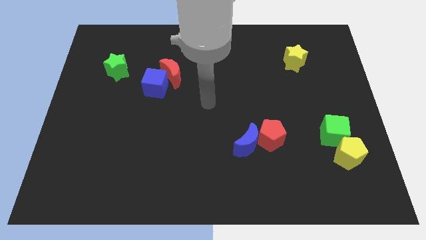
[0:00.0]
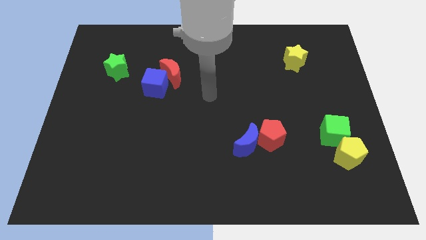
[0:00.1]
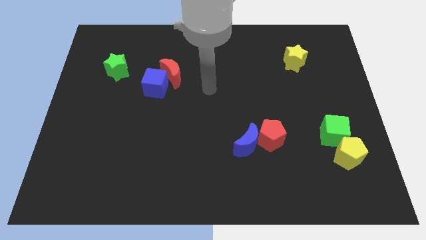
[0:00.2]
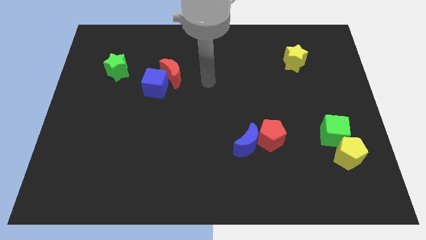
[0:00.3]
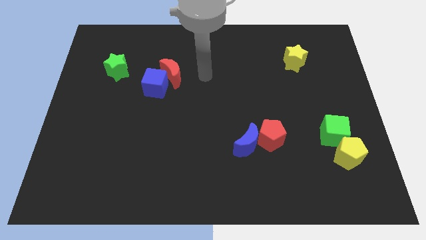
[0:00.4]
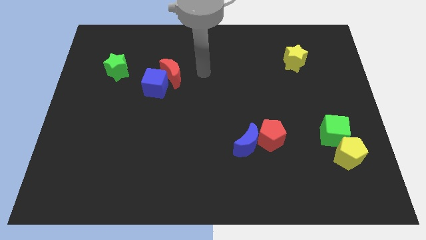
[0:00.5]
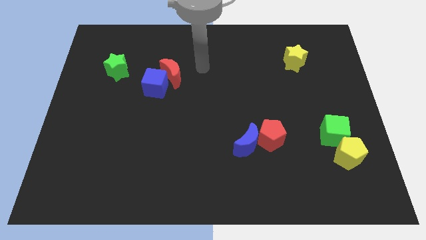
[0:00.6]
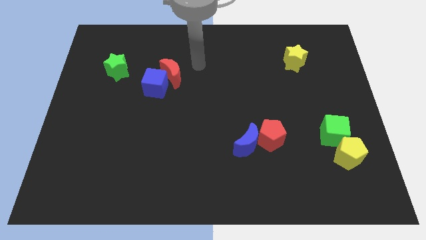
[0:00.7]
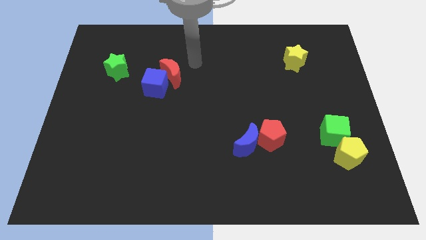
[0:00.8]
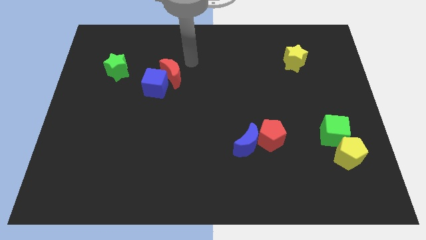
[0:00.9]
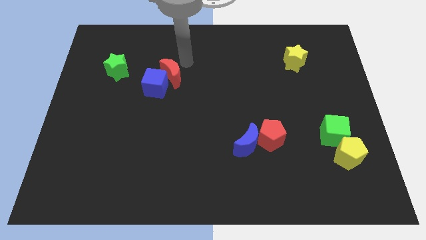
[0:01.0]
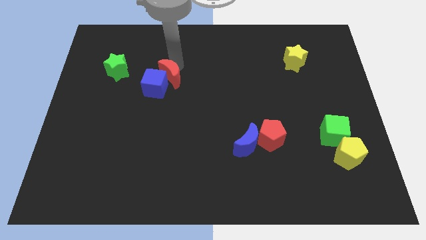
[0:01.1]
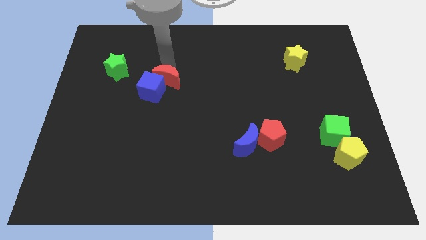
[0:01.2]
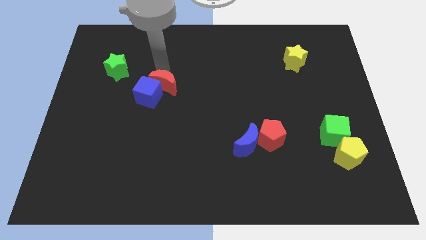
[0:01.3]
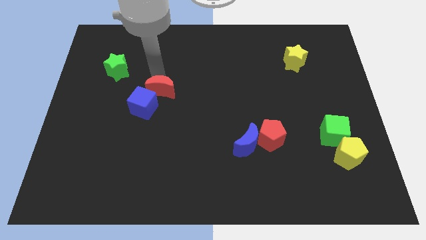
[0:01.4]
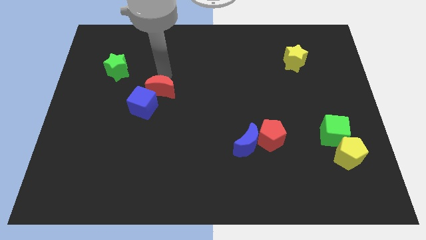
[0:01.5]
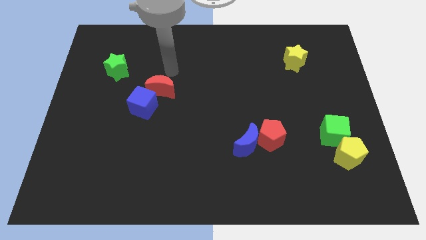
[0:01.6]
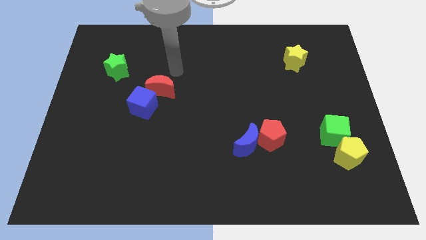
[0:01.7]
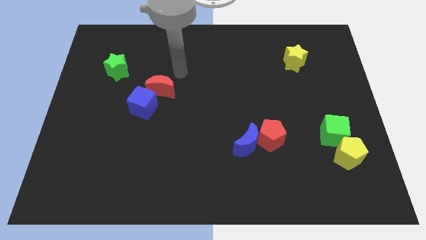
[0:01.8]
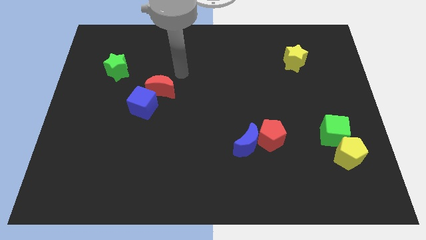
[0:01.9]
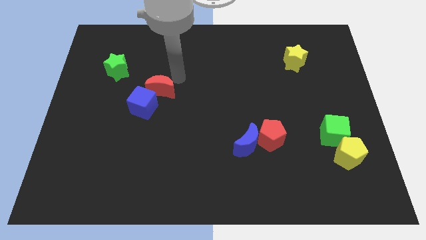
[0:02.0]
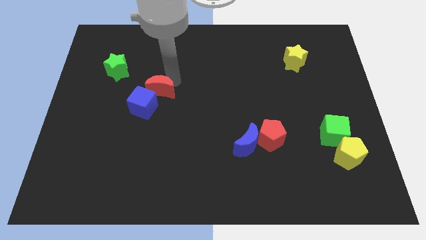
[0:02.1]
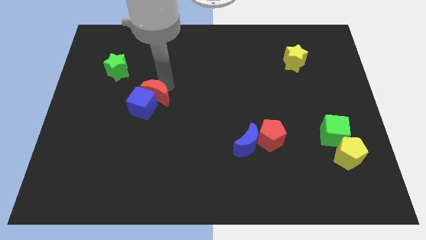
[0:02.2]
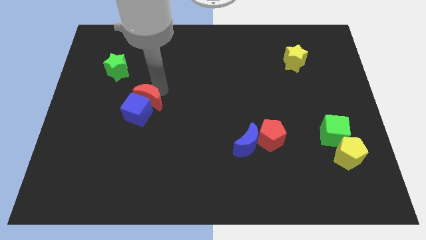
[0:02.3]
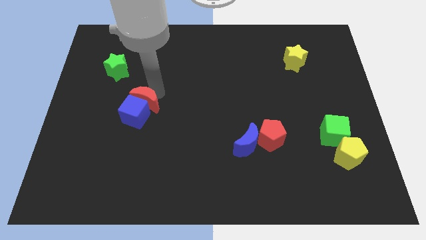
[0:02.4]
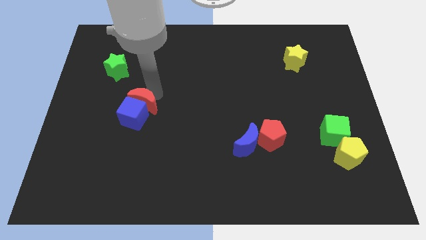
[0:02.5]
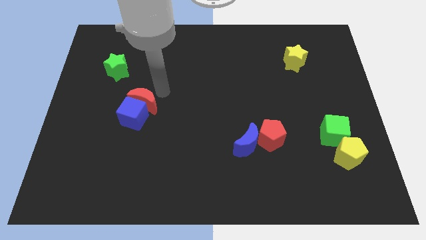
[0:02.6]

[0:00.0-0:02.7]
push red moon along with blue moon down

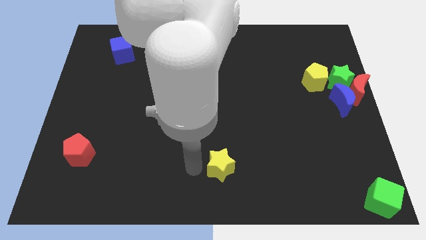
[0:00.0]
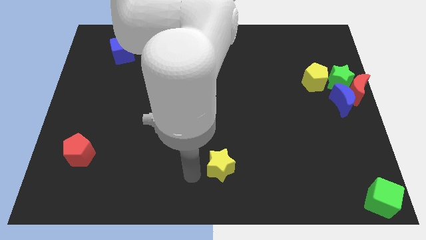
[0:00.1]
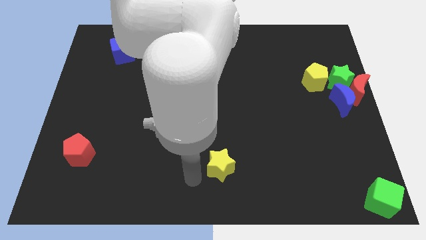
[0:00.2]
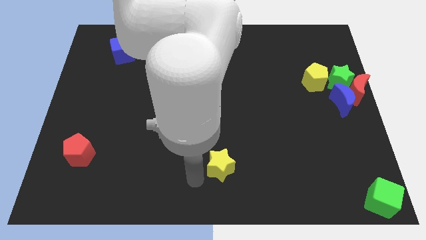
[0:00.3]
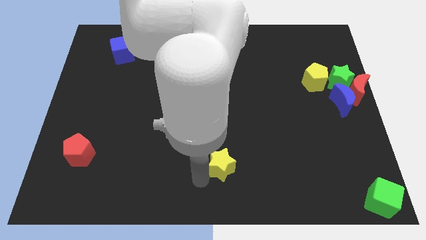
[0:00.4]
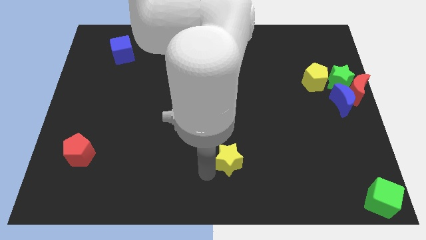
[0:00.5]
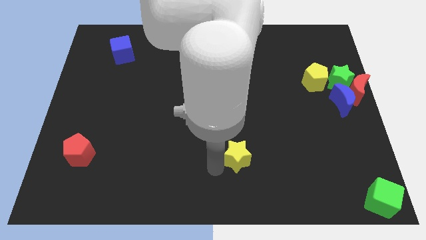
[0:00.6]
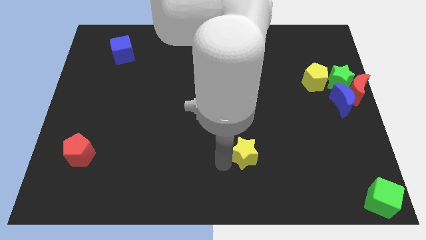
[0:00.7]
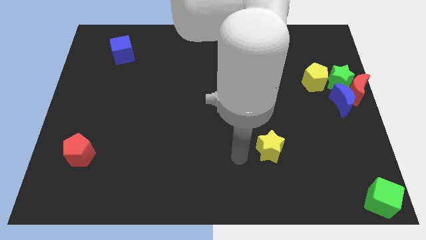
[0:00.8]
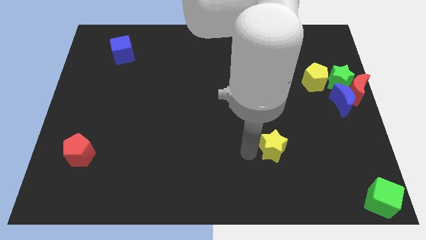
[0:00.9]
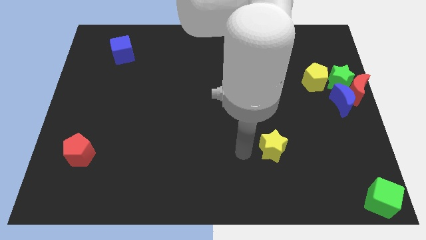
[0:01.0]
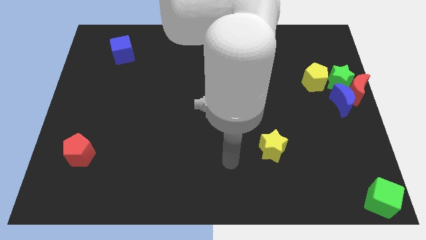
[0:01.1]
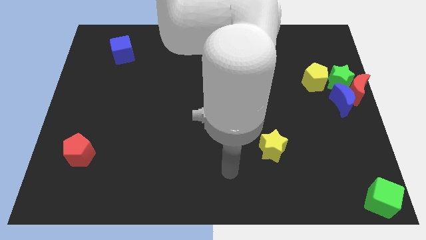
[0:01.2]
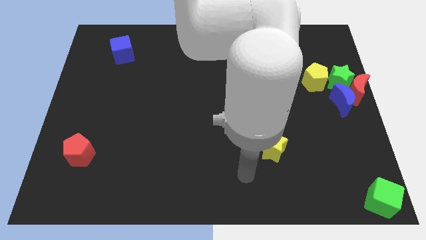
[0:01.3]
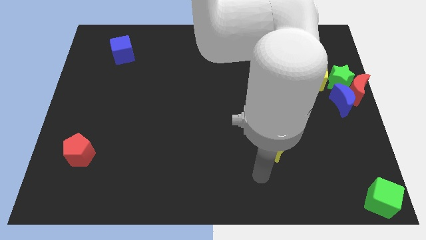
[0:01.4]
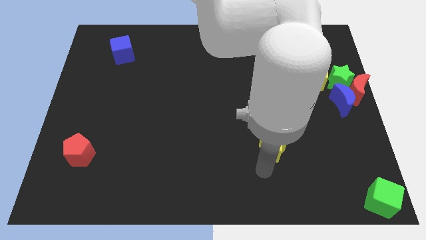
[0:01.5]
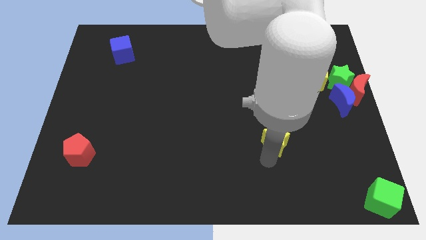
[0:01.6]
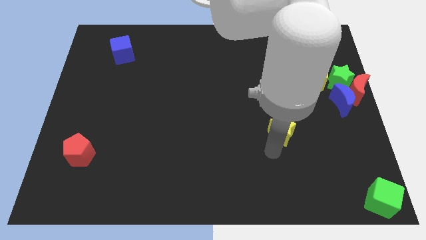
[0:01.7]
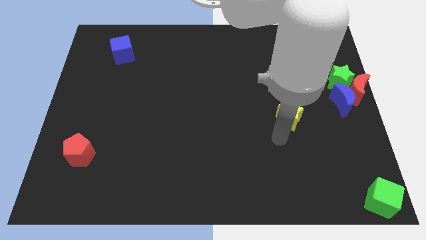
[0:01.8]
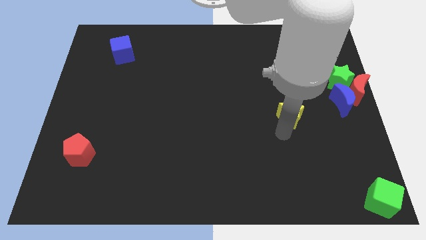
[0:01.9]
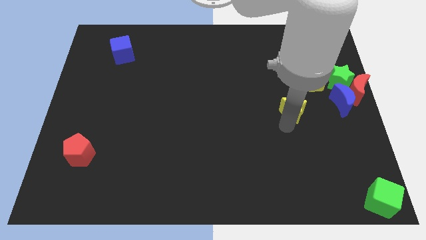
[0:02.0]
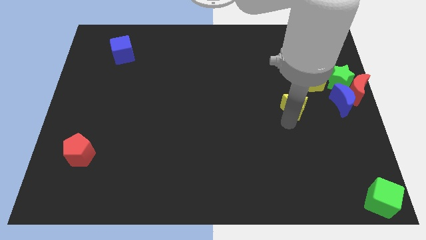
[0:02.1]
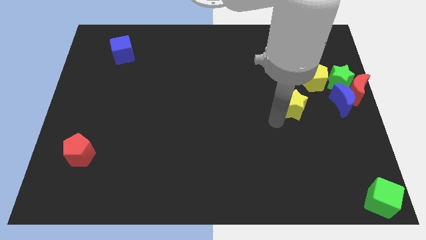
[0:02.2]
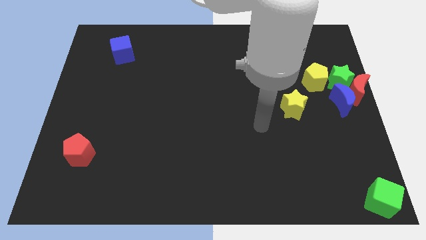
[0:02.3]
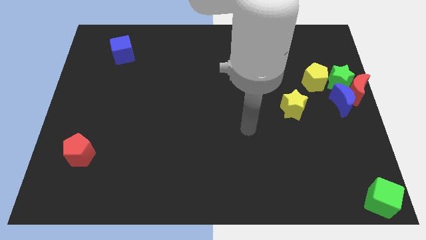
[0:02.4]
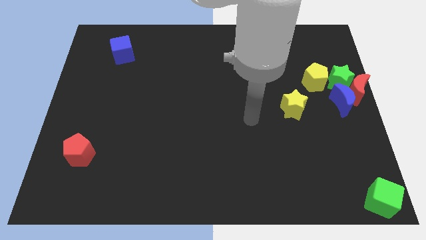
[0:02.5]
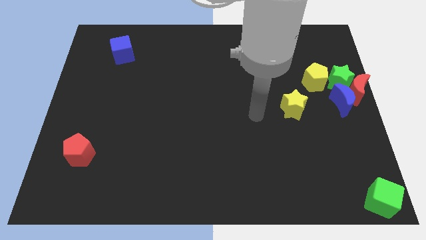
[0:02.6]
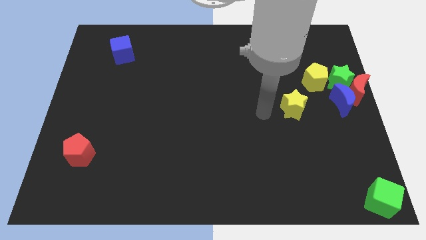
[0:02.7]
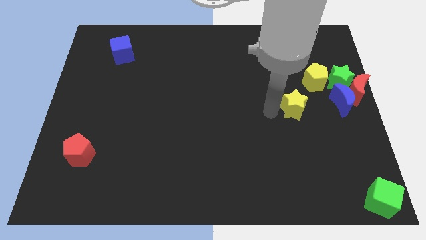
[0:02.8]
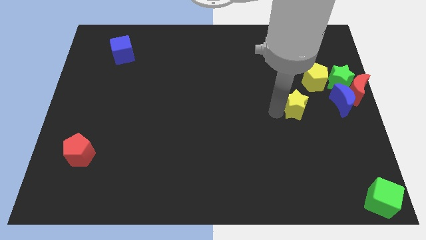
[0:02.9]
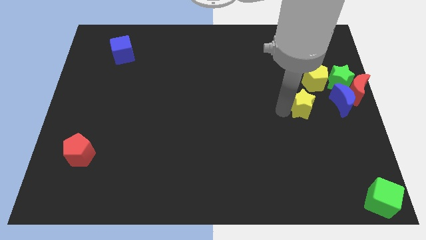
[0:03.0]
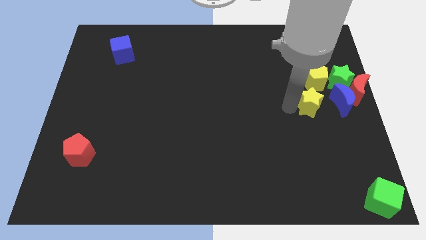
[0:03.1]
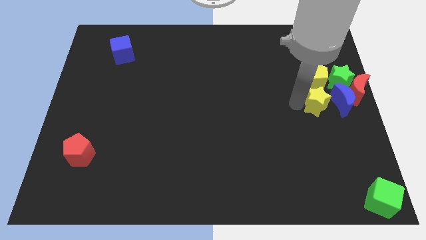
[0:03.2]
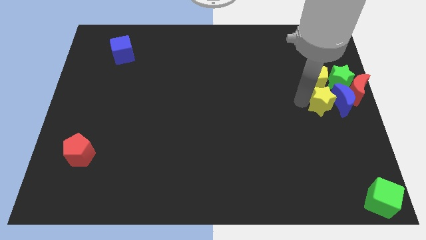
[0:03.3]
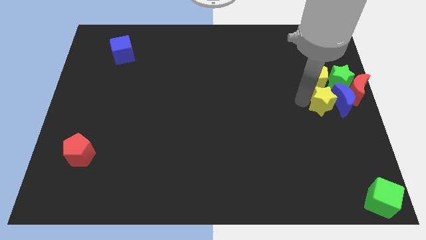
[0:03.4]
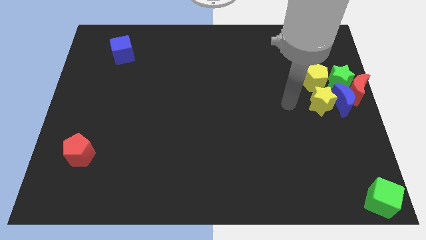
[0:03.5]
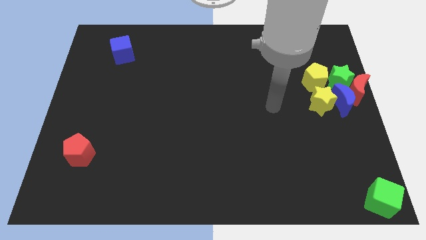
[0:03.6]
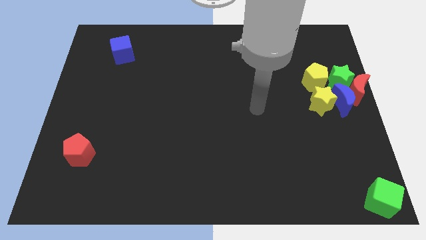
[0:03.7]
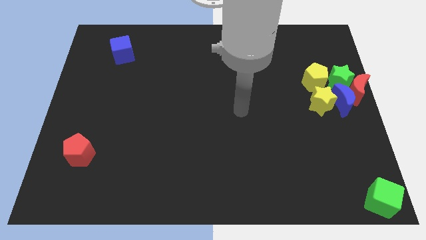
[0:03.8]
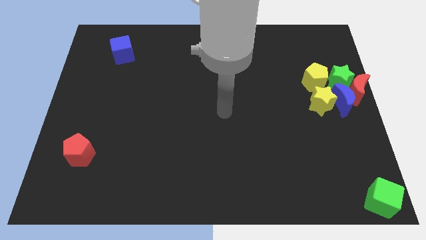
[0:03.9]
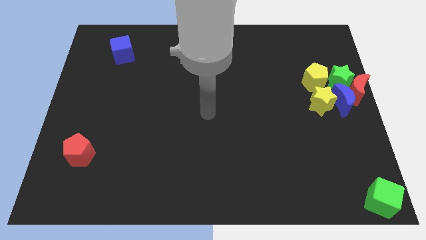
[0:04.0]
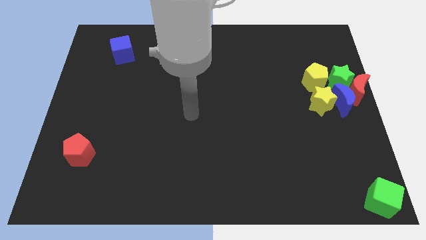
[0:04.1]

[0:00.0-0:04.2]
push yellow star into the blue crescent

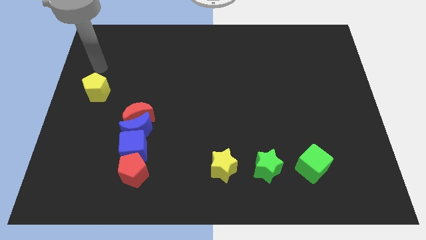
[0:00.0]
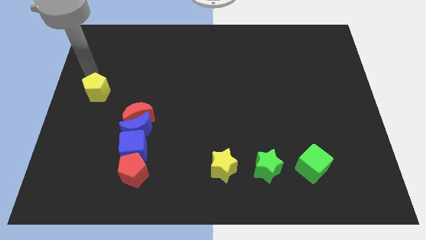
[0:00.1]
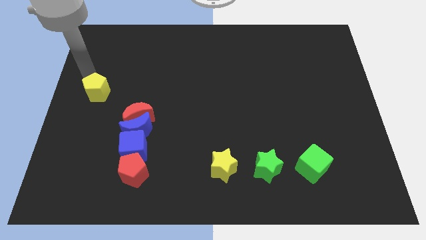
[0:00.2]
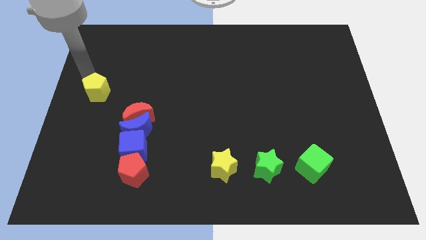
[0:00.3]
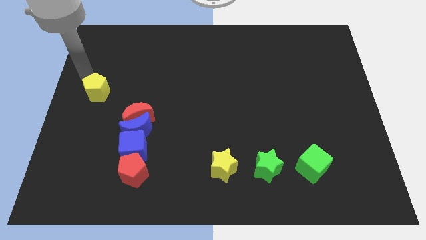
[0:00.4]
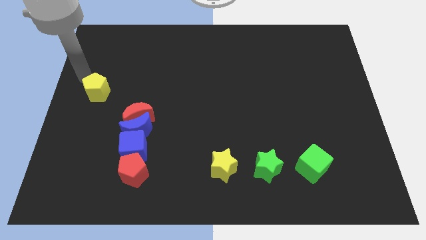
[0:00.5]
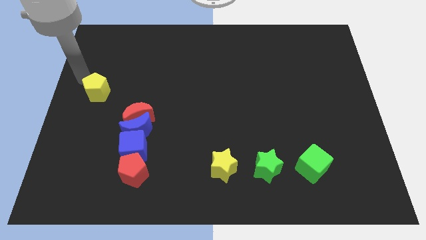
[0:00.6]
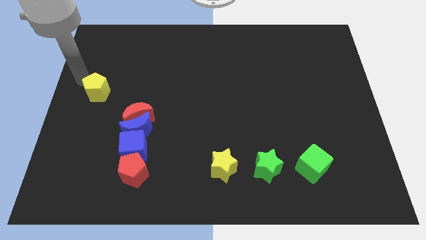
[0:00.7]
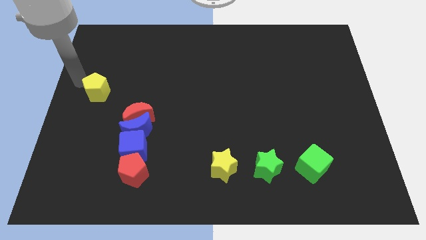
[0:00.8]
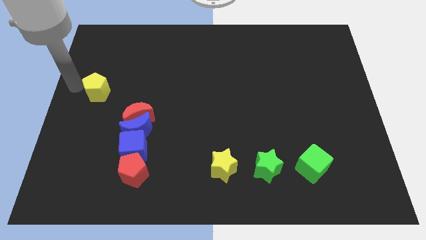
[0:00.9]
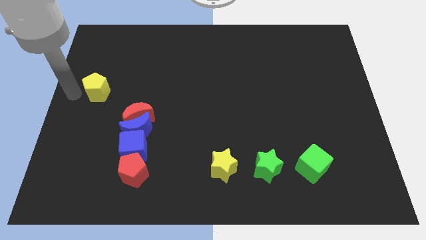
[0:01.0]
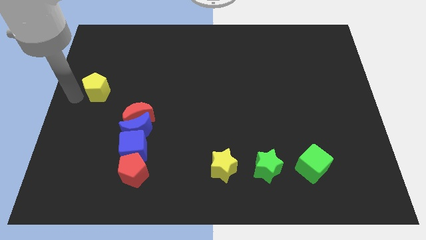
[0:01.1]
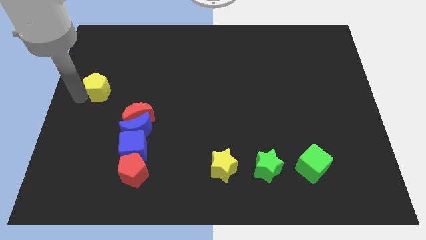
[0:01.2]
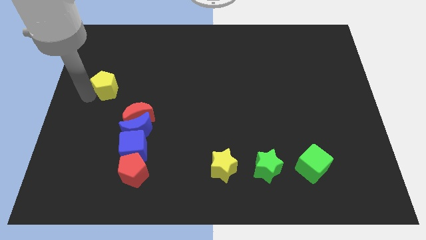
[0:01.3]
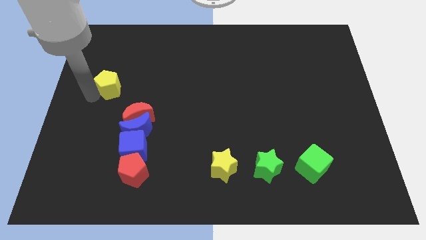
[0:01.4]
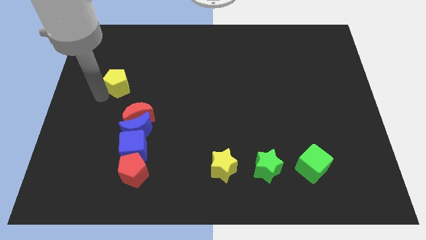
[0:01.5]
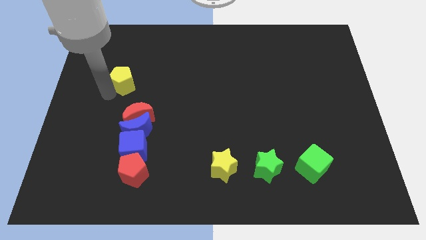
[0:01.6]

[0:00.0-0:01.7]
push yellow pentagon slightly to the right

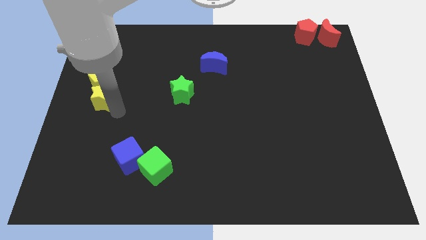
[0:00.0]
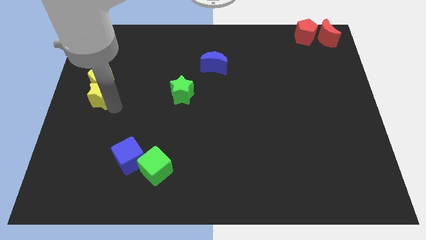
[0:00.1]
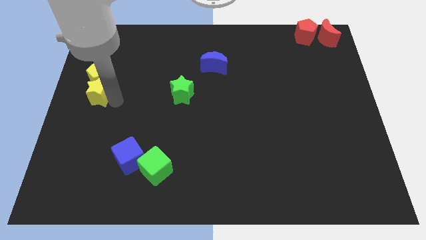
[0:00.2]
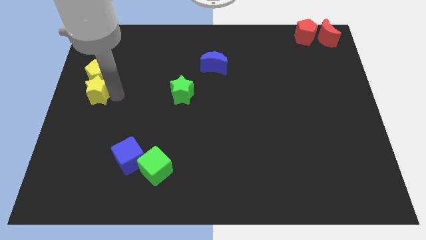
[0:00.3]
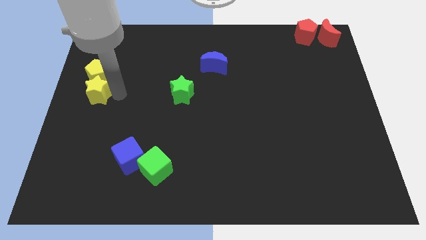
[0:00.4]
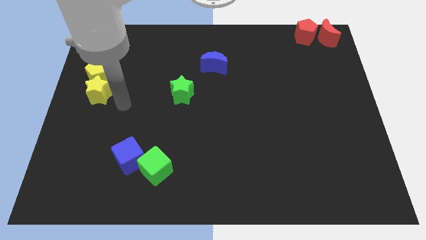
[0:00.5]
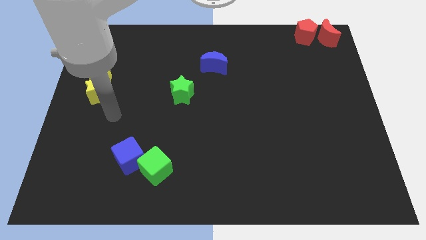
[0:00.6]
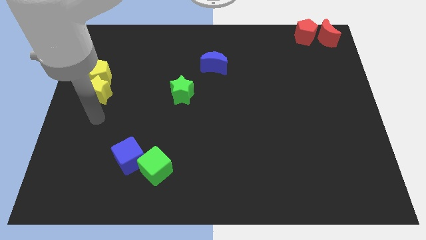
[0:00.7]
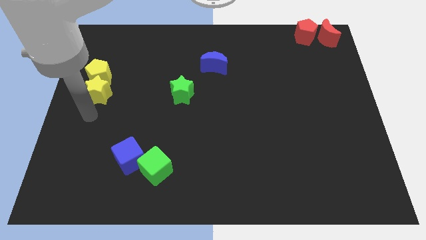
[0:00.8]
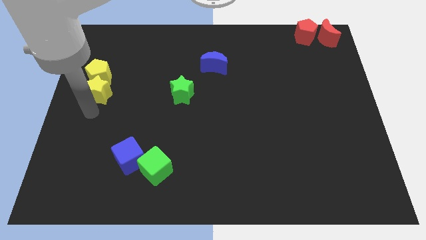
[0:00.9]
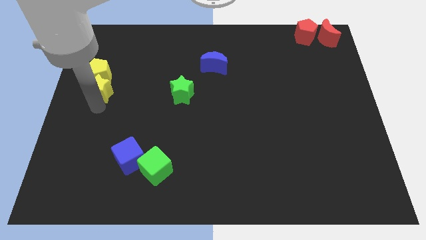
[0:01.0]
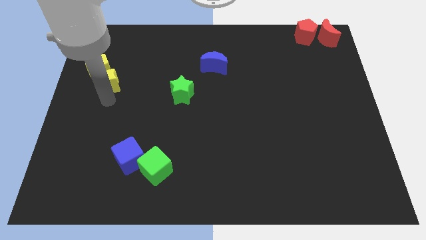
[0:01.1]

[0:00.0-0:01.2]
push the two yellow blocks to the top side at a time
